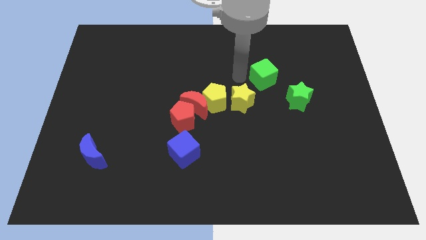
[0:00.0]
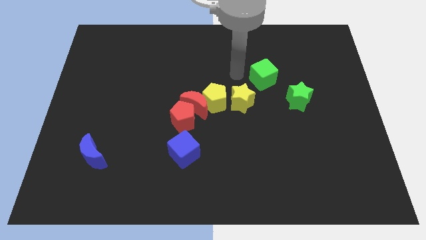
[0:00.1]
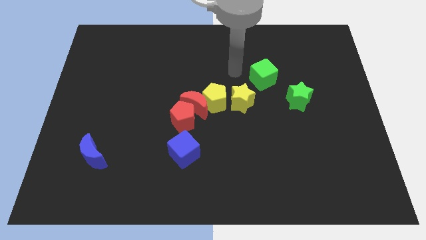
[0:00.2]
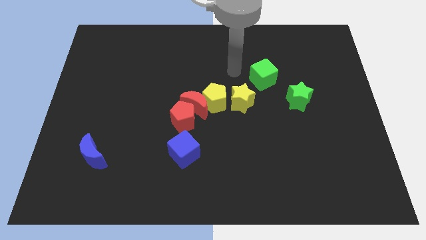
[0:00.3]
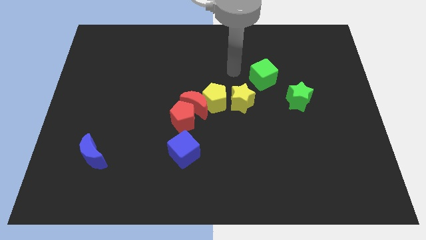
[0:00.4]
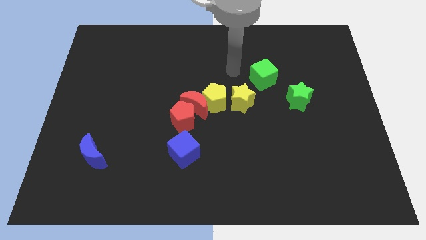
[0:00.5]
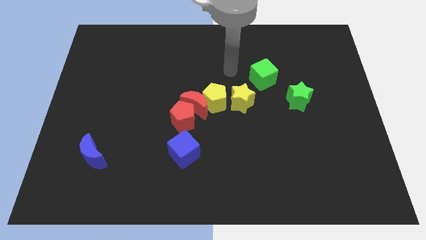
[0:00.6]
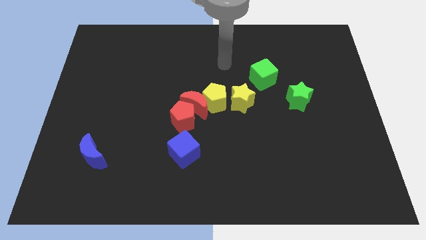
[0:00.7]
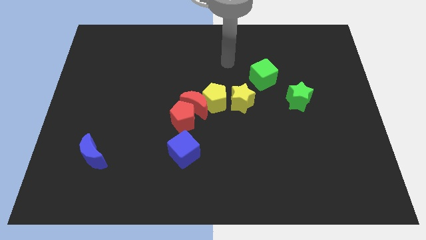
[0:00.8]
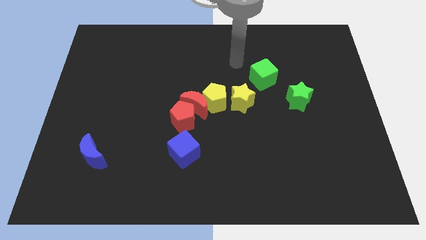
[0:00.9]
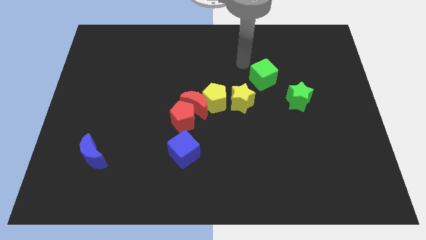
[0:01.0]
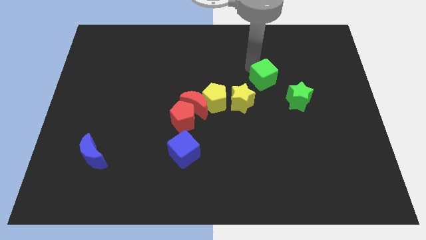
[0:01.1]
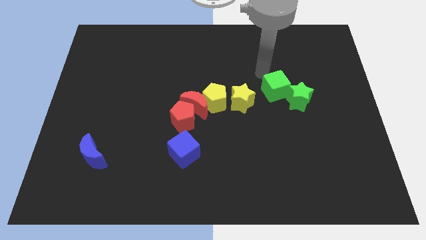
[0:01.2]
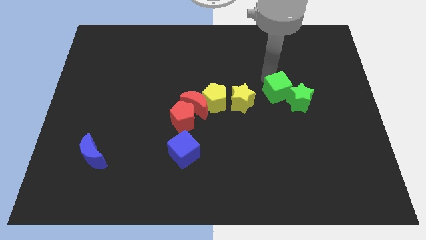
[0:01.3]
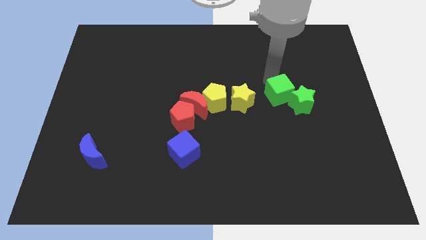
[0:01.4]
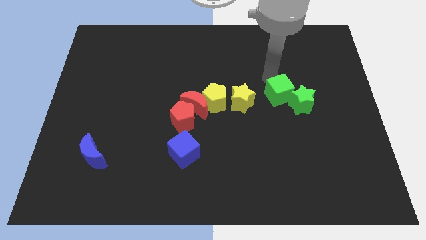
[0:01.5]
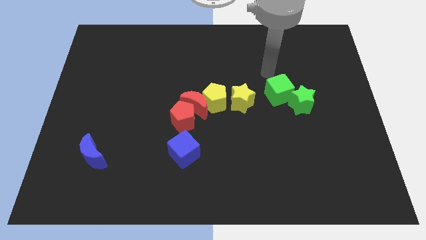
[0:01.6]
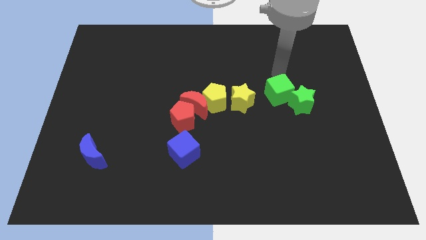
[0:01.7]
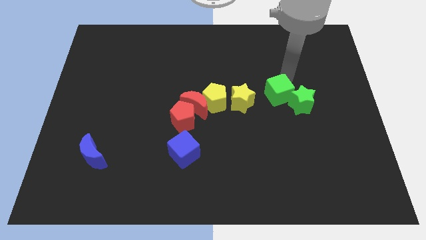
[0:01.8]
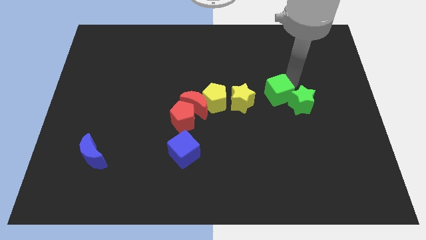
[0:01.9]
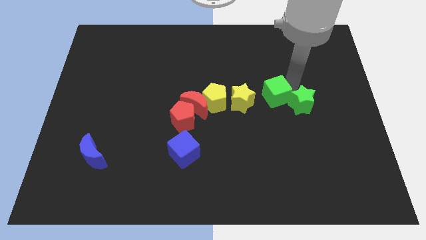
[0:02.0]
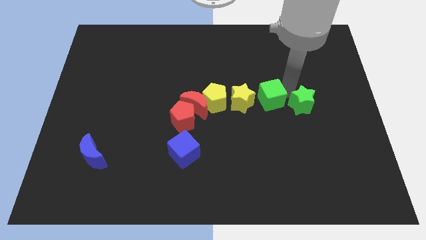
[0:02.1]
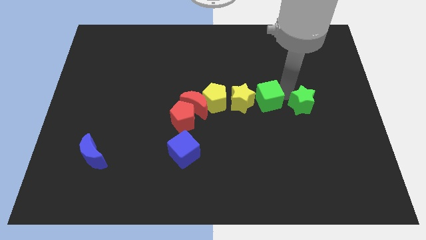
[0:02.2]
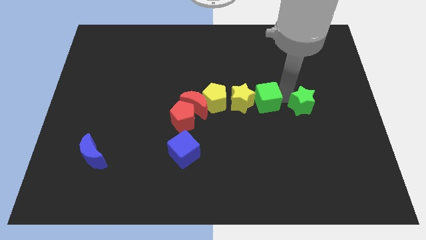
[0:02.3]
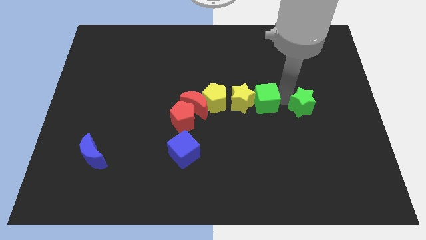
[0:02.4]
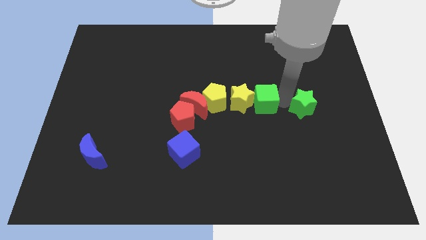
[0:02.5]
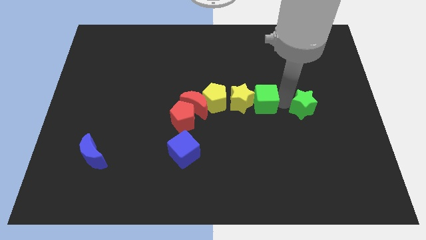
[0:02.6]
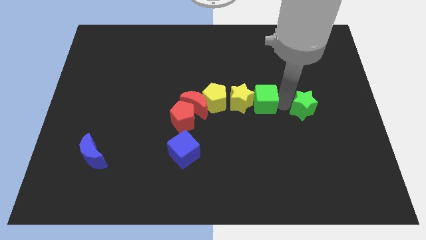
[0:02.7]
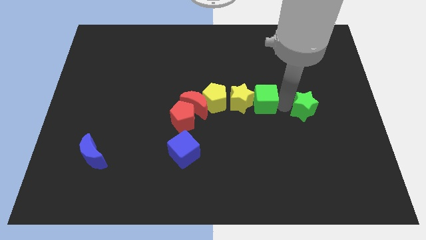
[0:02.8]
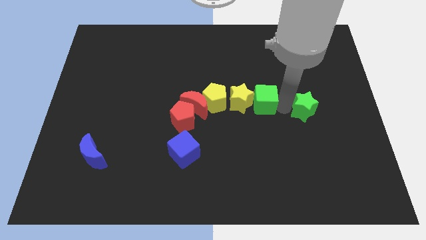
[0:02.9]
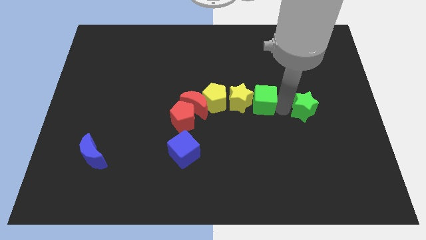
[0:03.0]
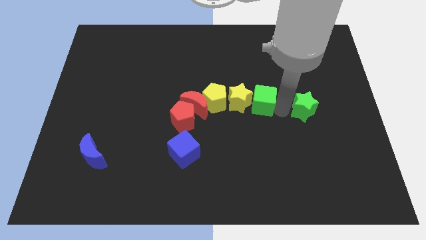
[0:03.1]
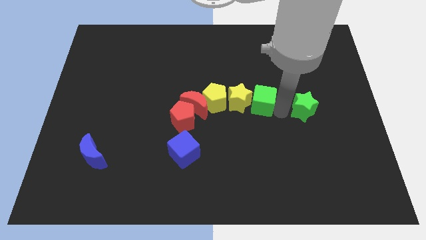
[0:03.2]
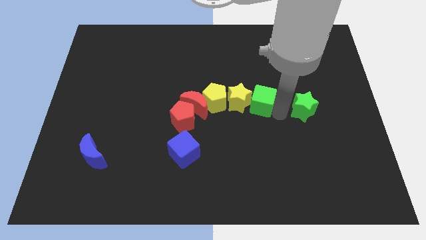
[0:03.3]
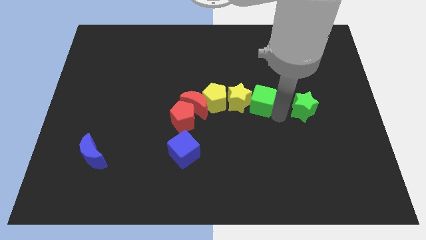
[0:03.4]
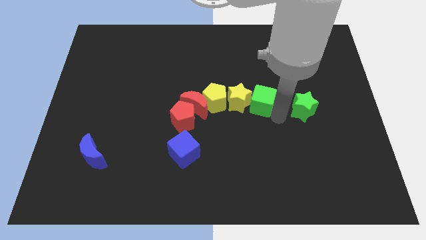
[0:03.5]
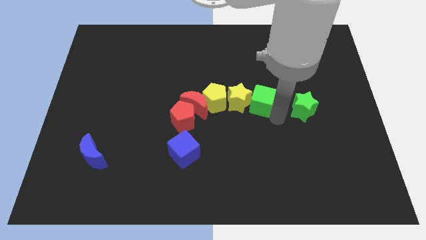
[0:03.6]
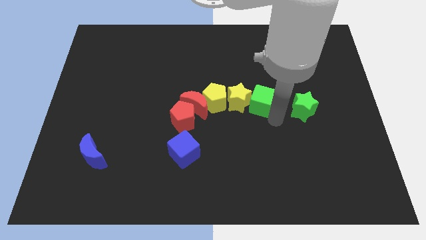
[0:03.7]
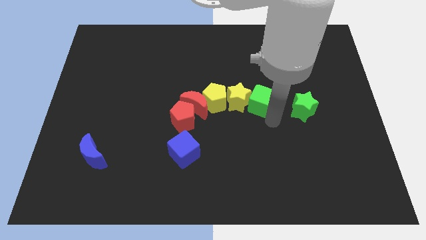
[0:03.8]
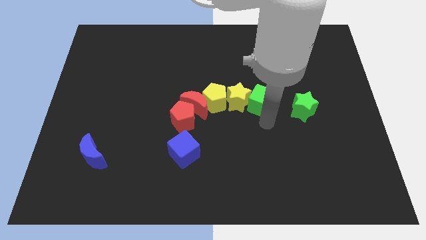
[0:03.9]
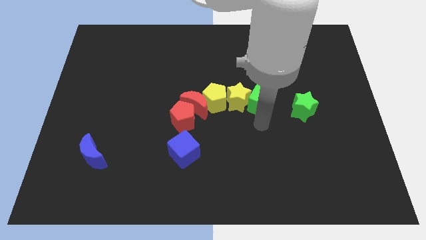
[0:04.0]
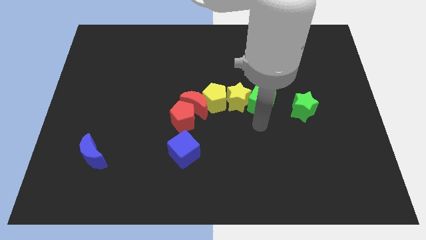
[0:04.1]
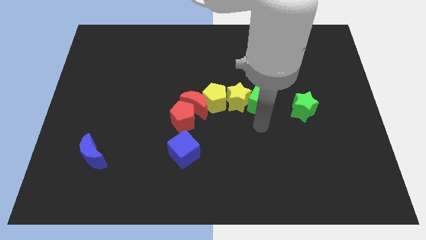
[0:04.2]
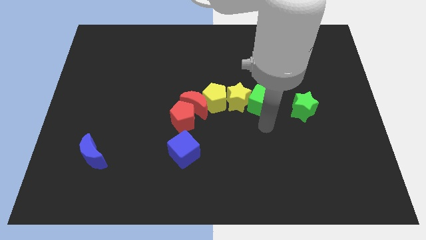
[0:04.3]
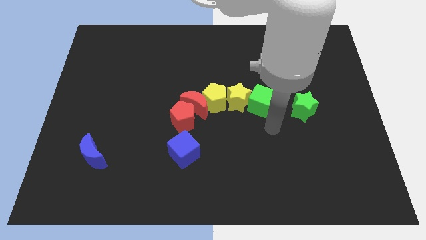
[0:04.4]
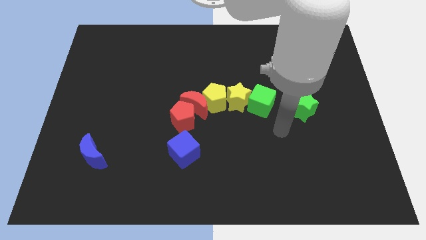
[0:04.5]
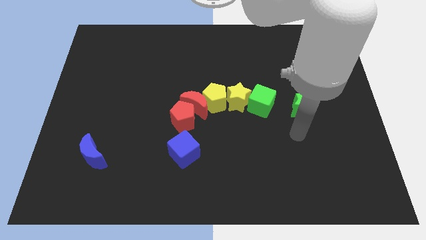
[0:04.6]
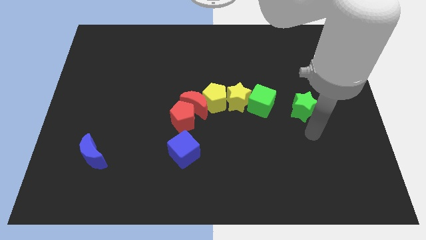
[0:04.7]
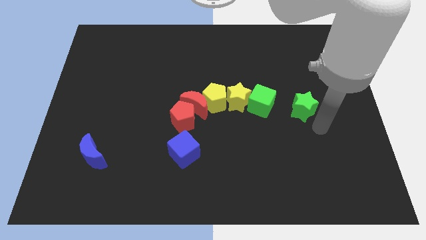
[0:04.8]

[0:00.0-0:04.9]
move green cube into the right of the yellow star

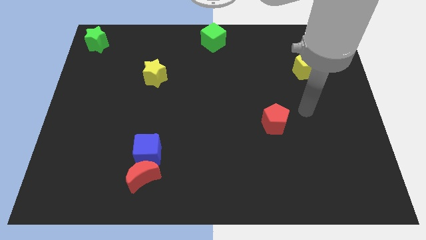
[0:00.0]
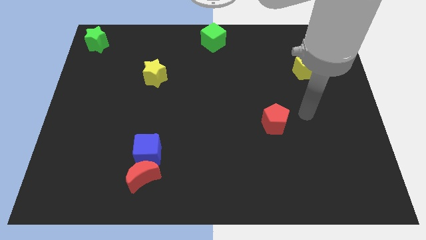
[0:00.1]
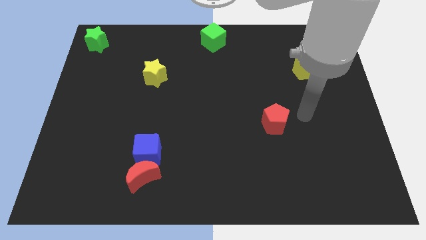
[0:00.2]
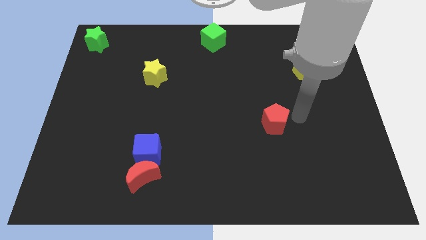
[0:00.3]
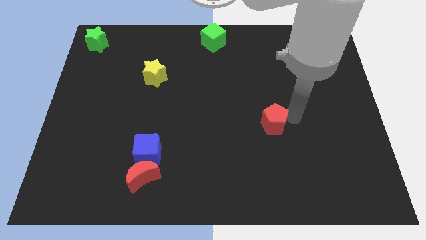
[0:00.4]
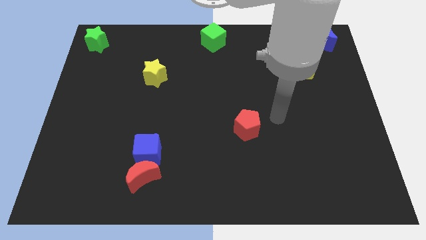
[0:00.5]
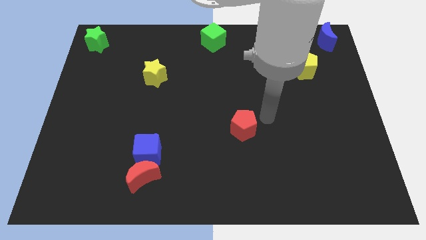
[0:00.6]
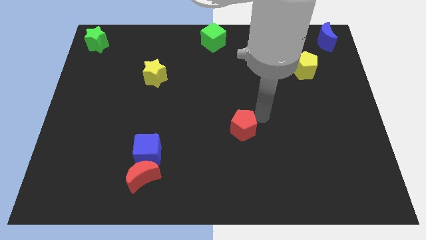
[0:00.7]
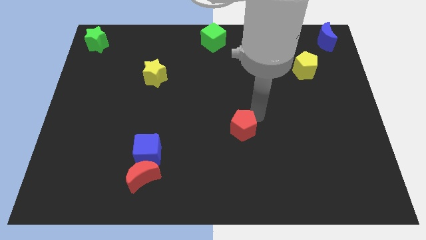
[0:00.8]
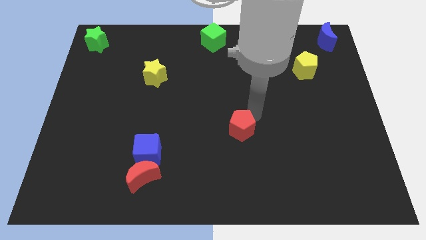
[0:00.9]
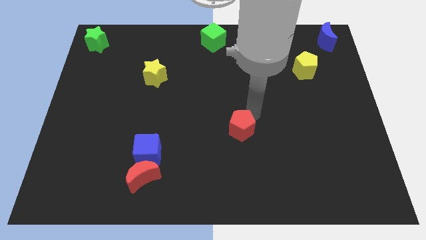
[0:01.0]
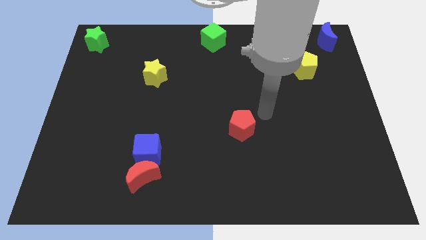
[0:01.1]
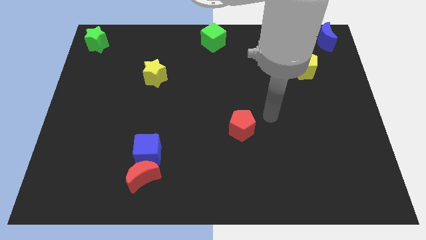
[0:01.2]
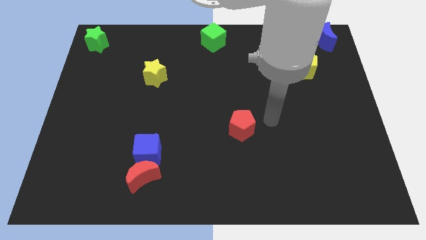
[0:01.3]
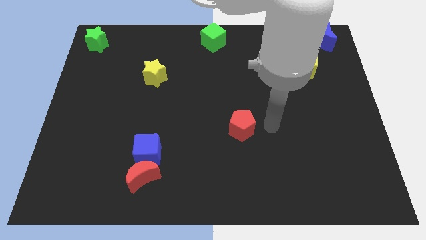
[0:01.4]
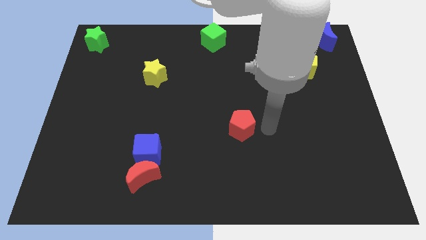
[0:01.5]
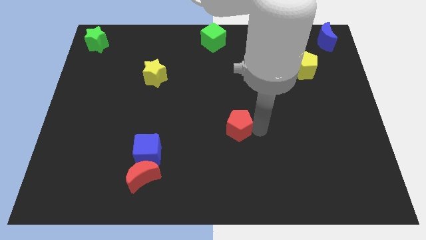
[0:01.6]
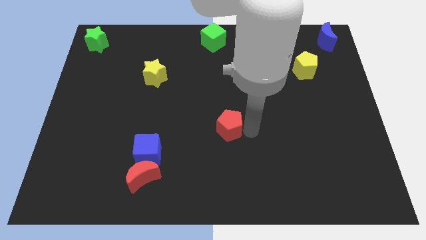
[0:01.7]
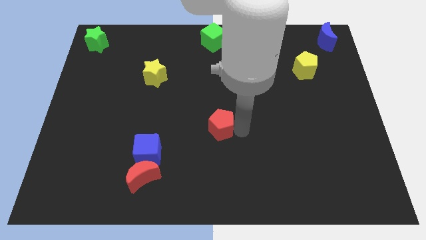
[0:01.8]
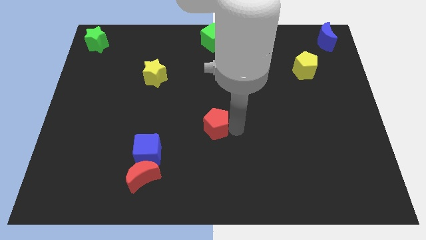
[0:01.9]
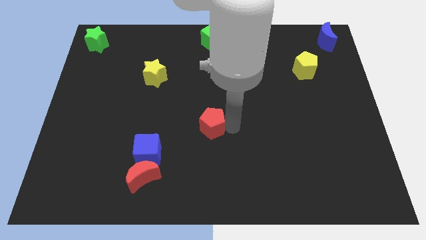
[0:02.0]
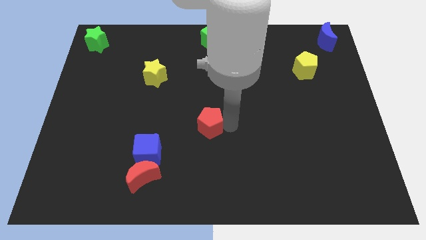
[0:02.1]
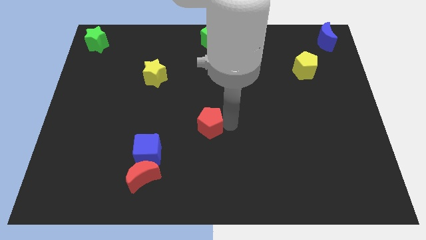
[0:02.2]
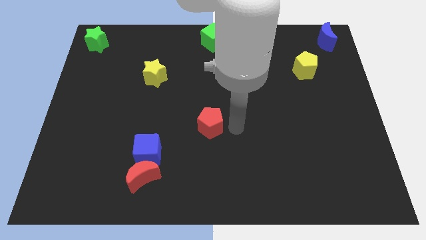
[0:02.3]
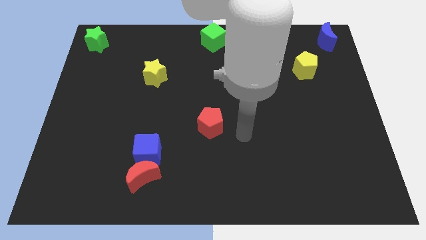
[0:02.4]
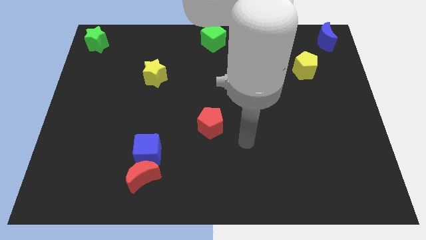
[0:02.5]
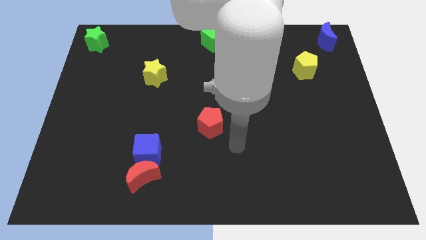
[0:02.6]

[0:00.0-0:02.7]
push the red pentagon to the center

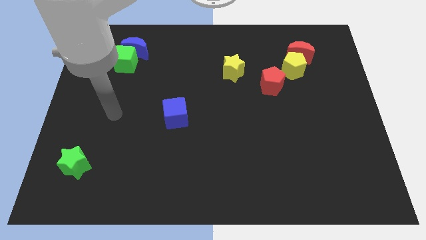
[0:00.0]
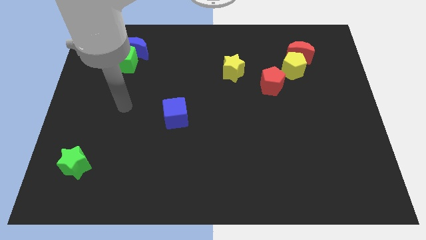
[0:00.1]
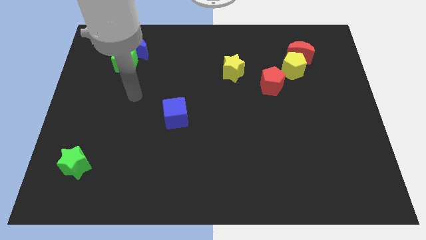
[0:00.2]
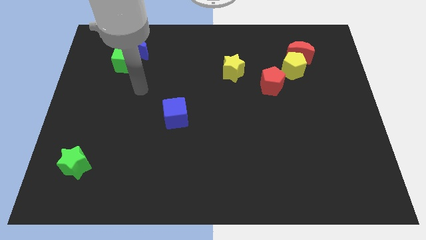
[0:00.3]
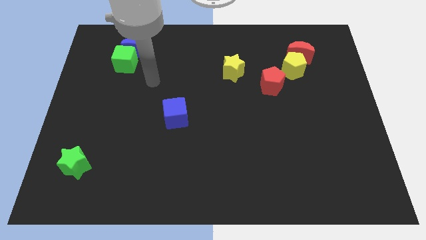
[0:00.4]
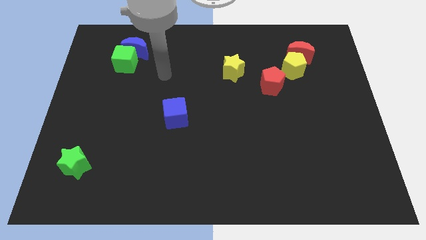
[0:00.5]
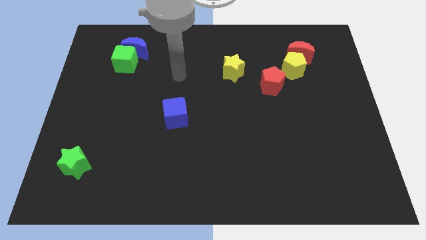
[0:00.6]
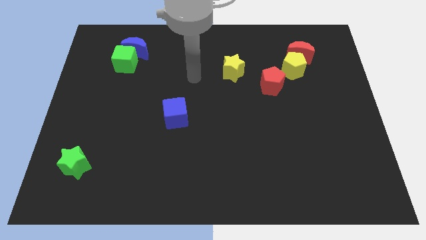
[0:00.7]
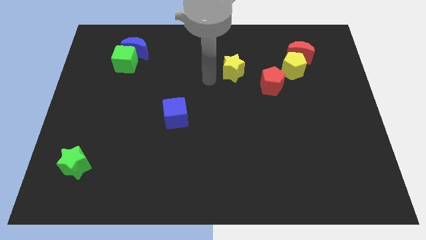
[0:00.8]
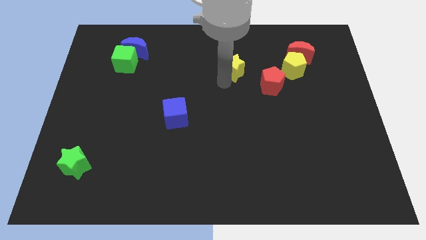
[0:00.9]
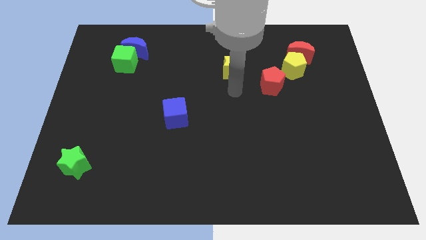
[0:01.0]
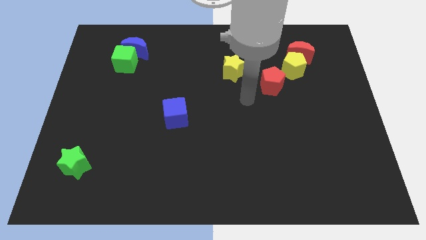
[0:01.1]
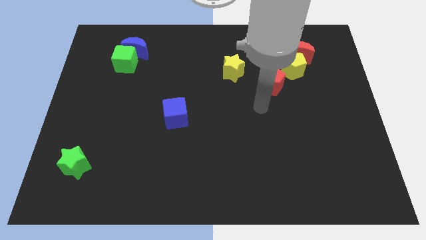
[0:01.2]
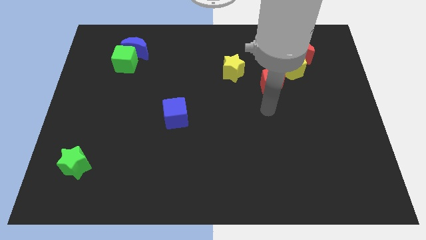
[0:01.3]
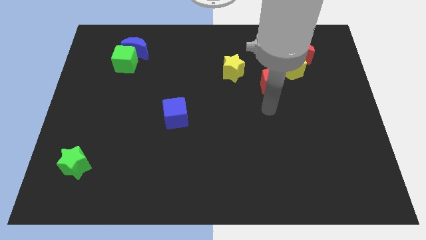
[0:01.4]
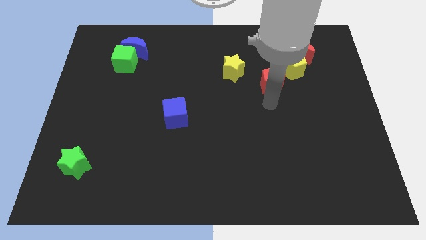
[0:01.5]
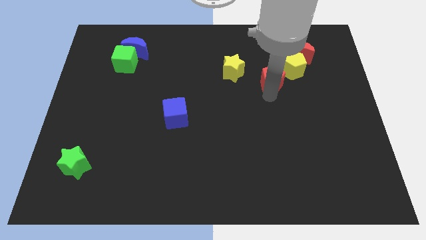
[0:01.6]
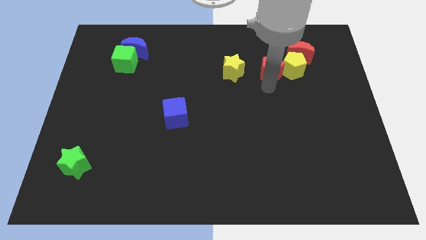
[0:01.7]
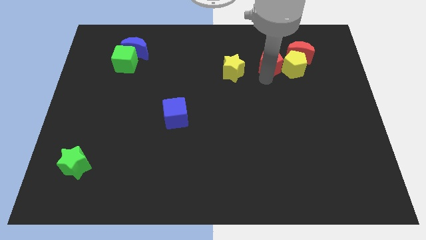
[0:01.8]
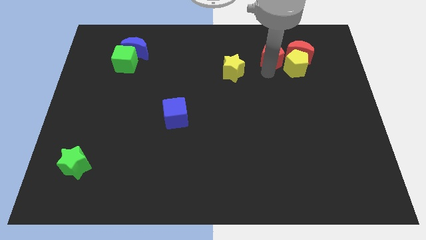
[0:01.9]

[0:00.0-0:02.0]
place the red pentagon in between the yellow star and yellow pentagon
